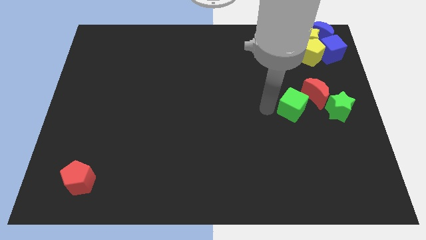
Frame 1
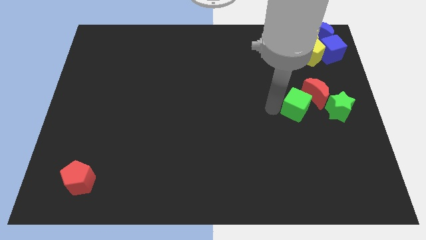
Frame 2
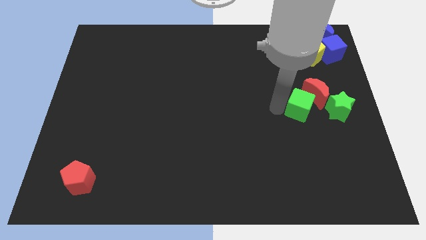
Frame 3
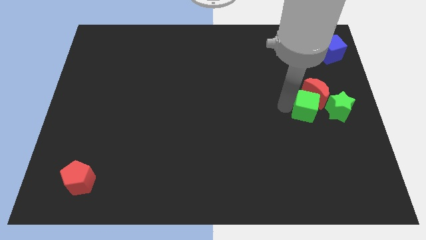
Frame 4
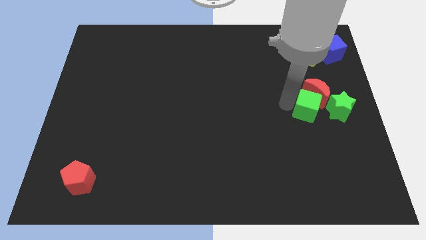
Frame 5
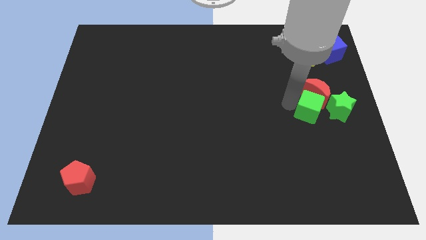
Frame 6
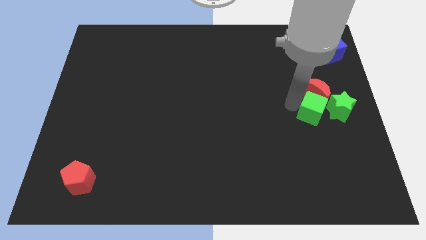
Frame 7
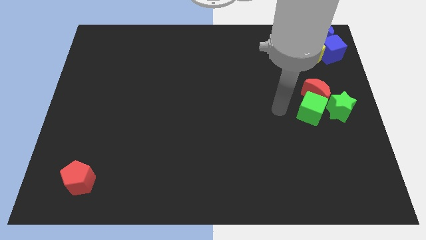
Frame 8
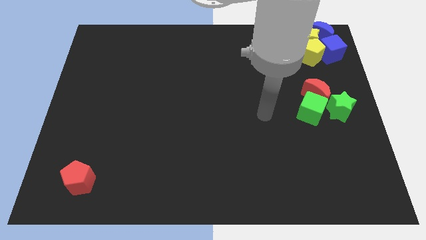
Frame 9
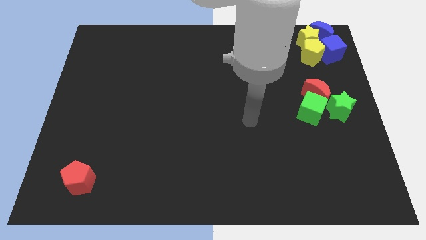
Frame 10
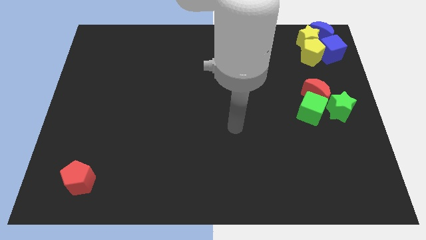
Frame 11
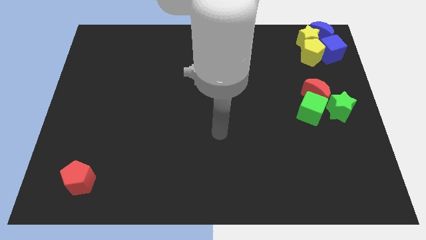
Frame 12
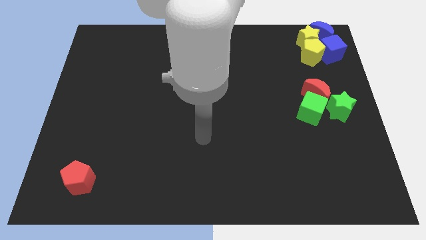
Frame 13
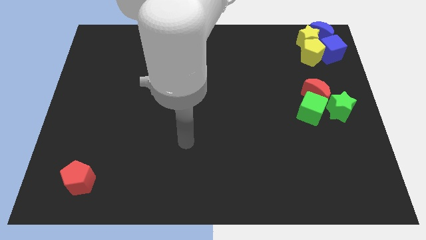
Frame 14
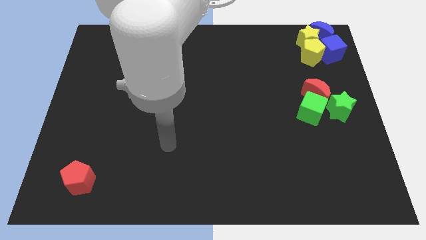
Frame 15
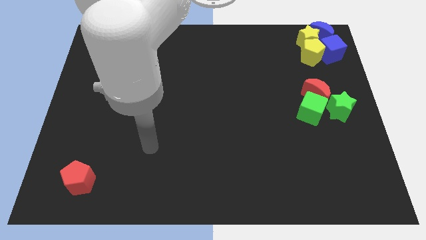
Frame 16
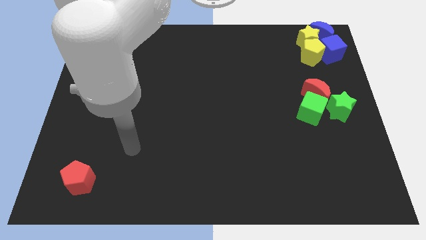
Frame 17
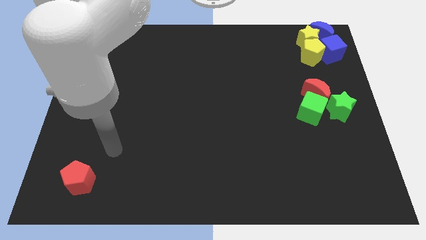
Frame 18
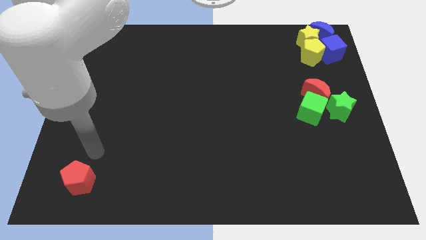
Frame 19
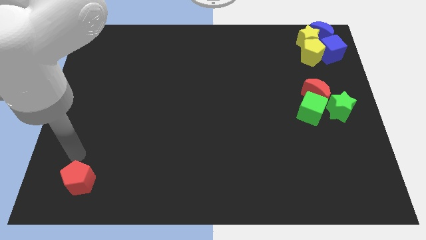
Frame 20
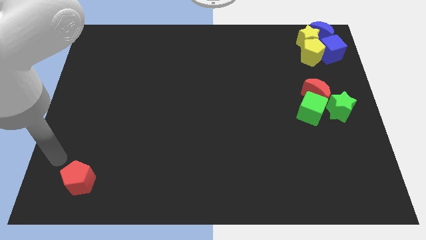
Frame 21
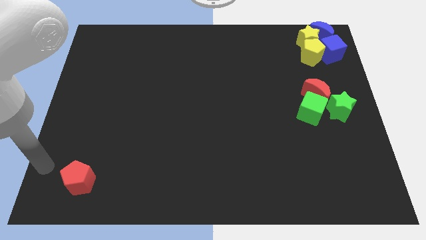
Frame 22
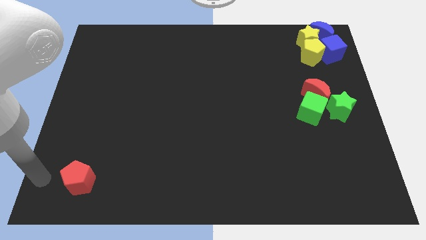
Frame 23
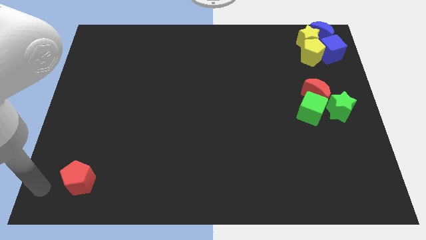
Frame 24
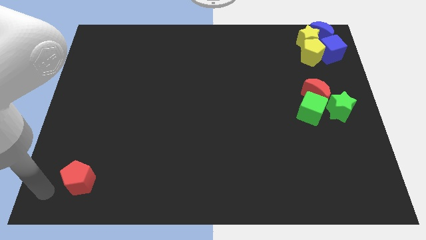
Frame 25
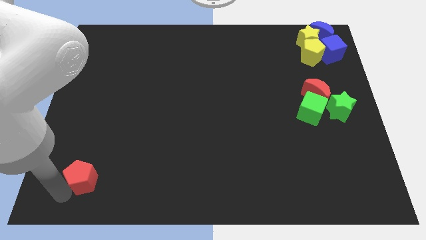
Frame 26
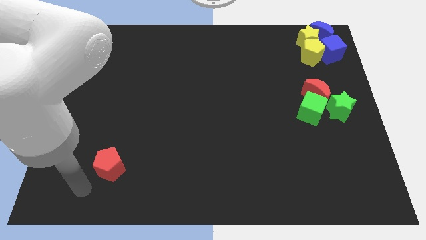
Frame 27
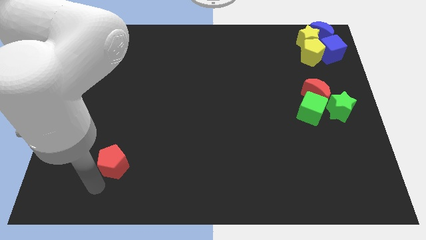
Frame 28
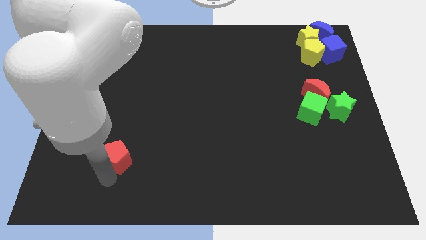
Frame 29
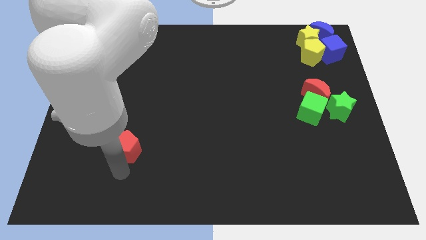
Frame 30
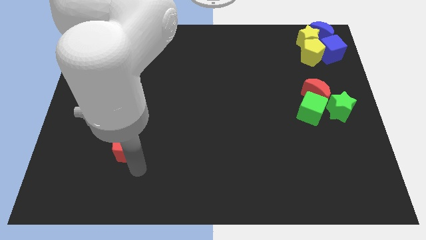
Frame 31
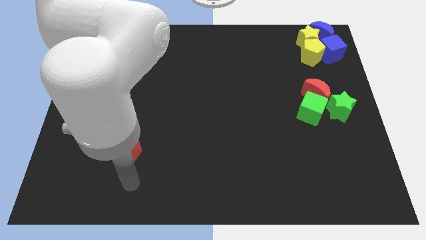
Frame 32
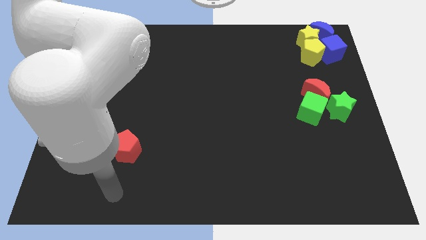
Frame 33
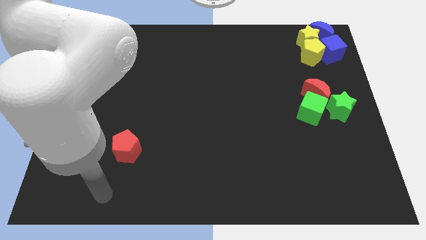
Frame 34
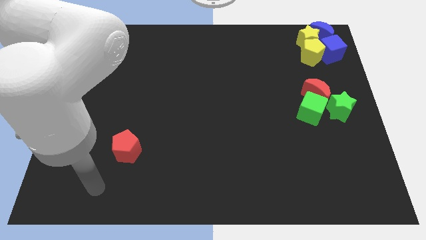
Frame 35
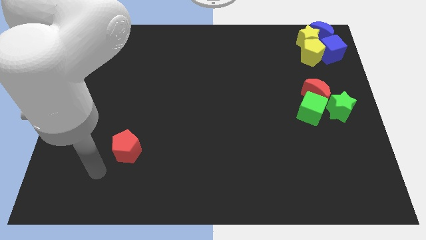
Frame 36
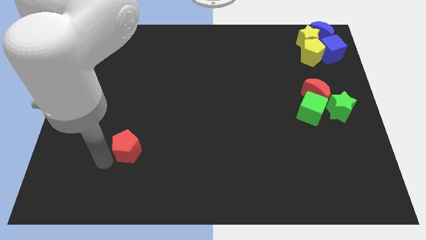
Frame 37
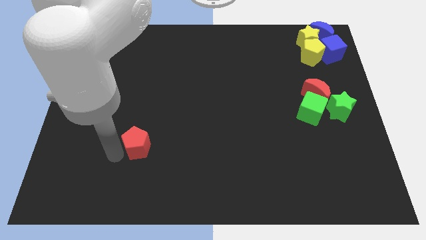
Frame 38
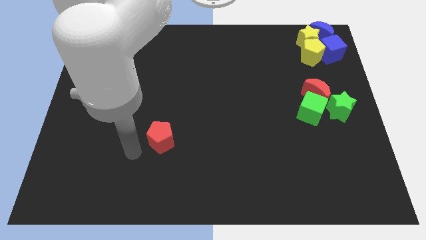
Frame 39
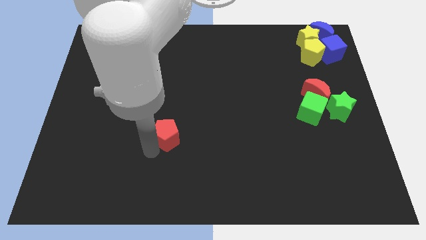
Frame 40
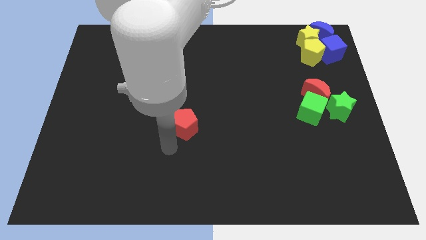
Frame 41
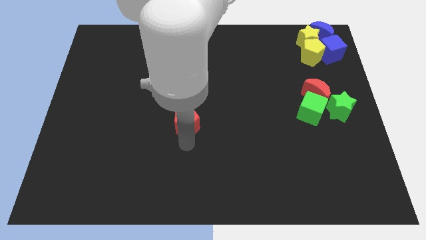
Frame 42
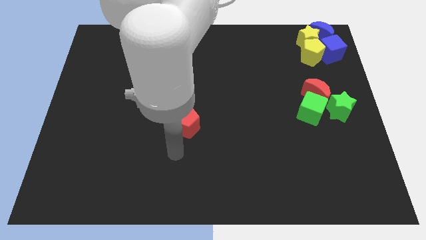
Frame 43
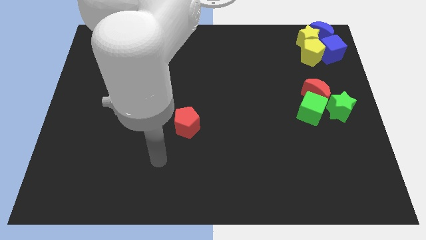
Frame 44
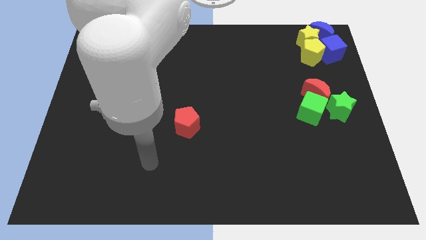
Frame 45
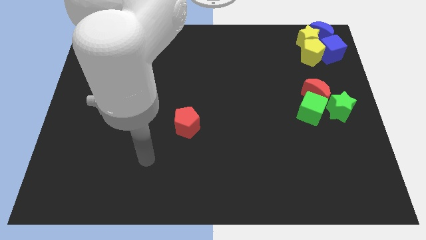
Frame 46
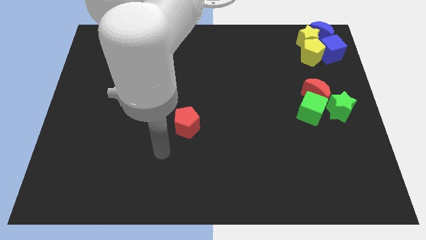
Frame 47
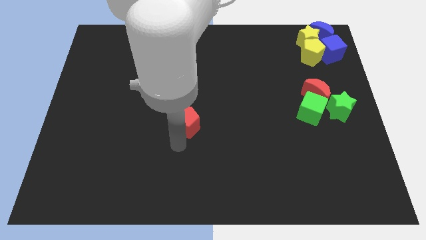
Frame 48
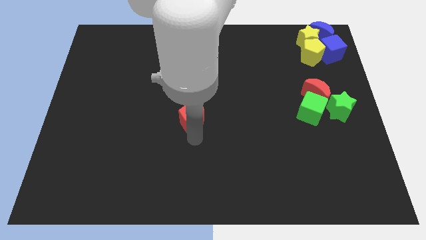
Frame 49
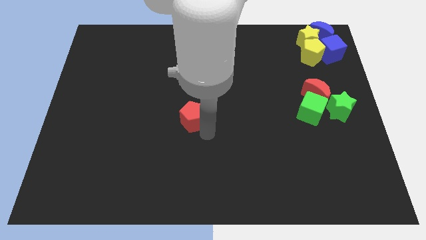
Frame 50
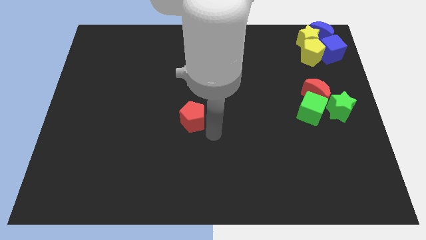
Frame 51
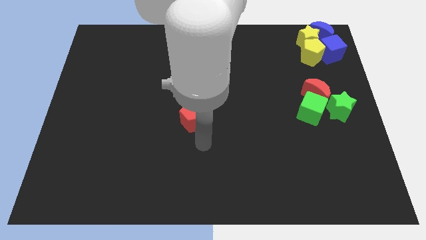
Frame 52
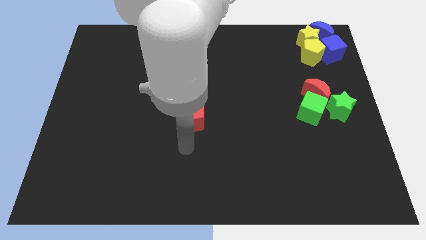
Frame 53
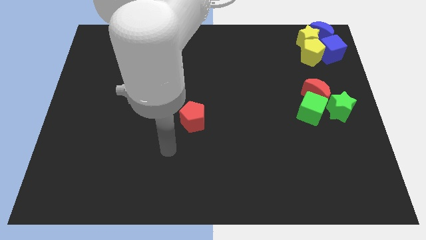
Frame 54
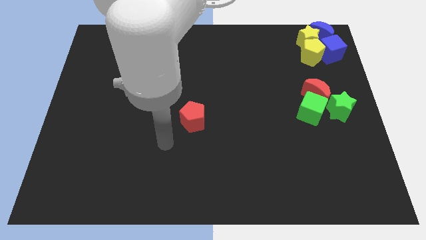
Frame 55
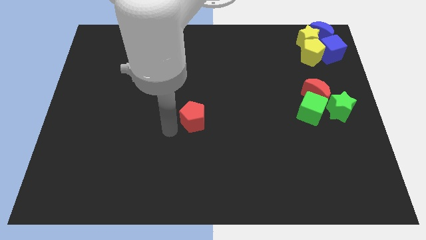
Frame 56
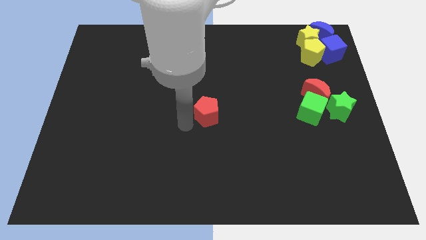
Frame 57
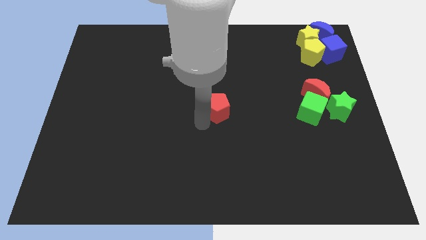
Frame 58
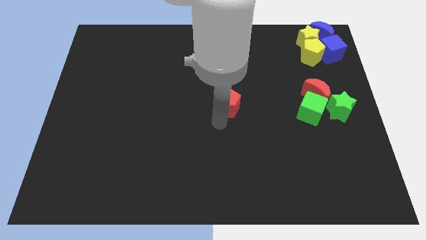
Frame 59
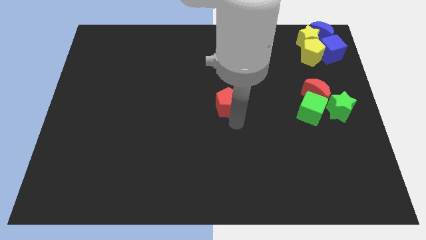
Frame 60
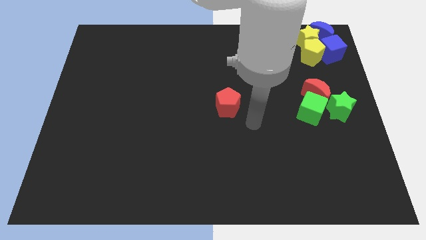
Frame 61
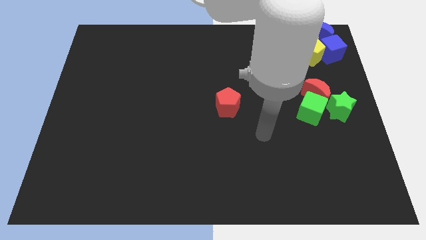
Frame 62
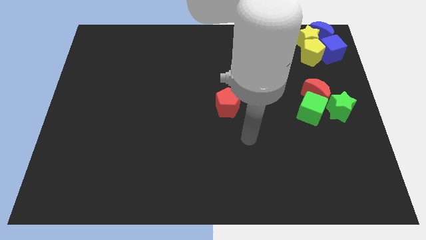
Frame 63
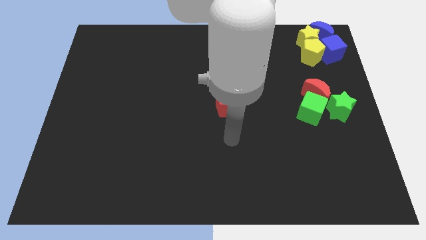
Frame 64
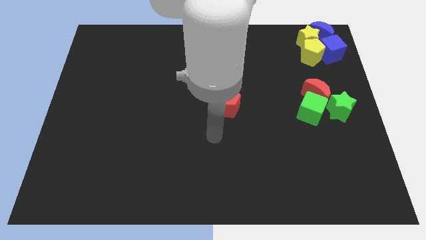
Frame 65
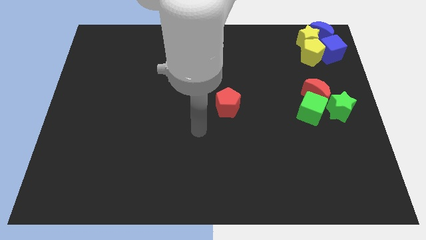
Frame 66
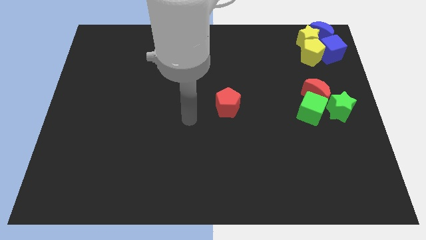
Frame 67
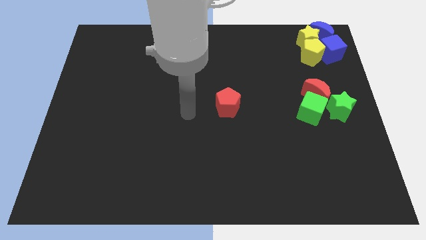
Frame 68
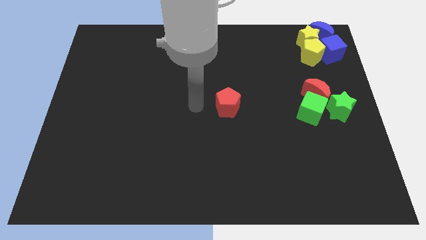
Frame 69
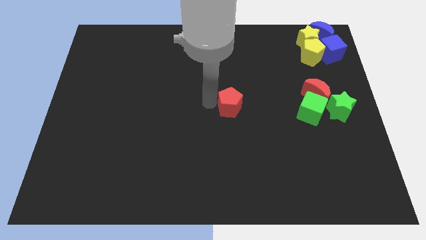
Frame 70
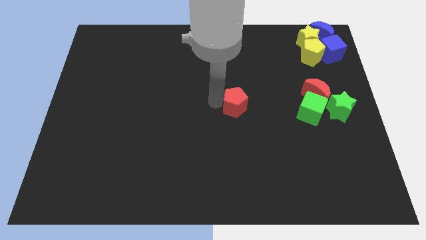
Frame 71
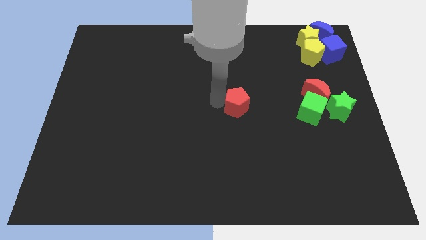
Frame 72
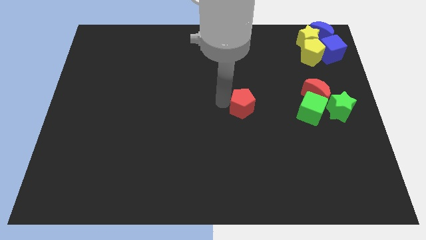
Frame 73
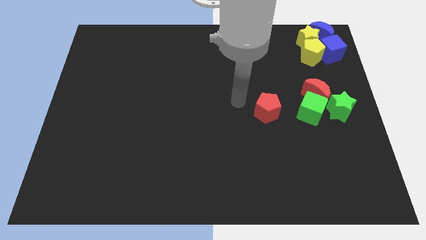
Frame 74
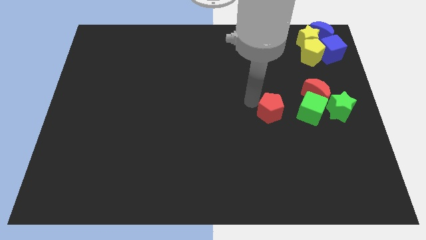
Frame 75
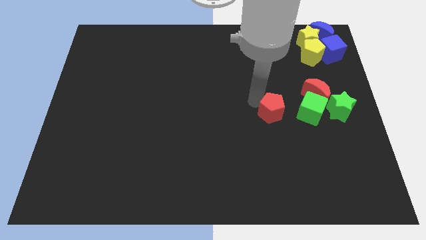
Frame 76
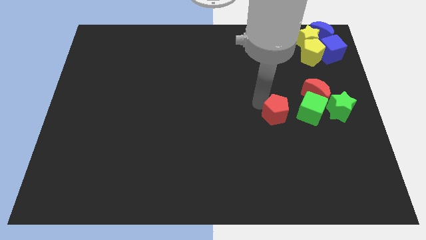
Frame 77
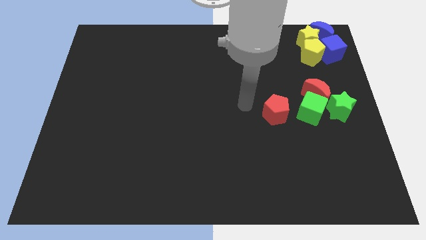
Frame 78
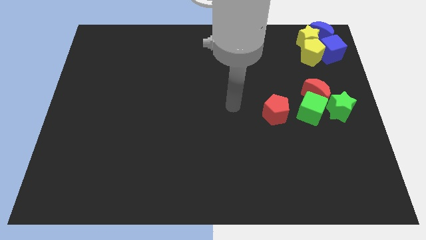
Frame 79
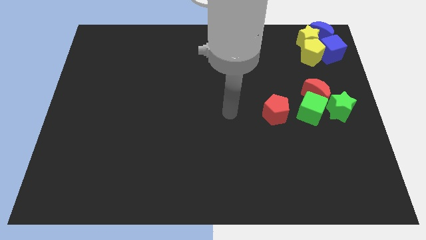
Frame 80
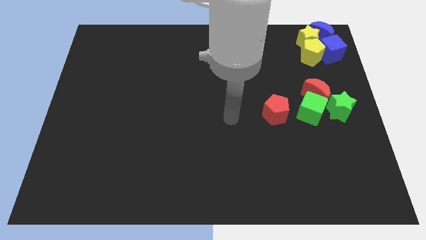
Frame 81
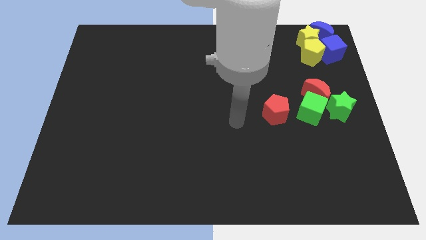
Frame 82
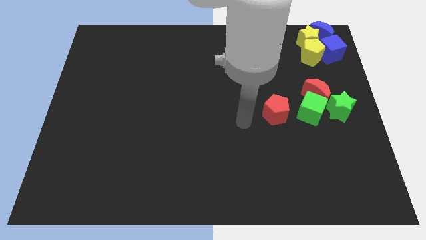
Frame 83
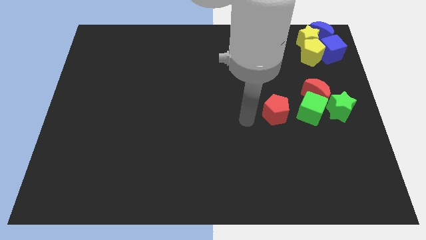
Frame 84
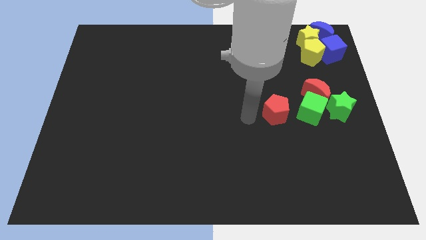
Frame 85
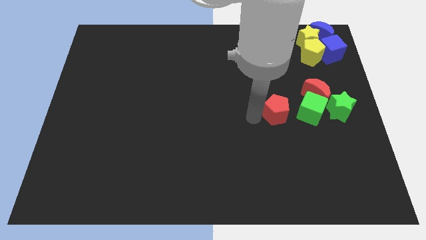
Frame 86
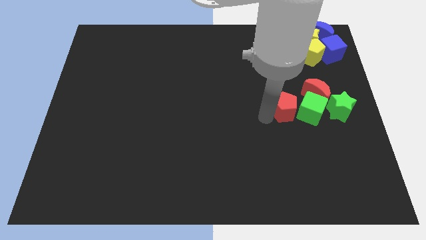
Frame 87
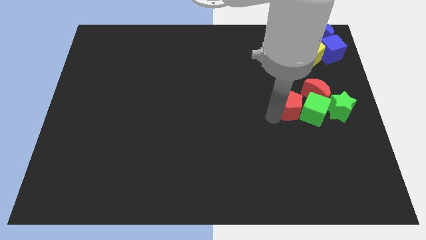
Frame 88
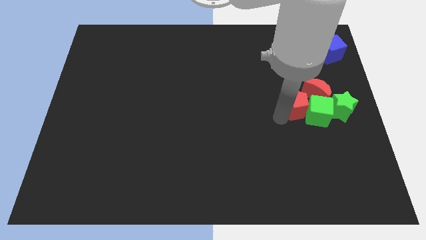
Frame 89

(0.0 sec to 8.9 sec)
group up the green blocks with the red blocks at the center right of the board
